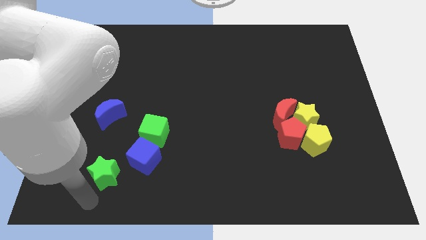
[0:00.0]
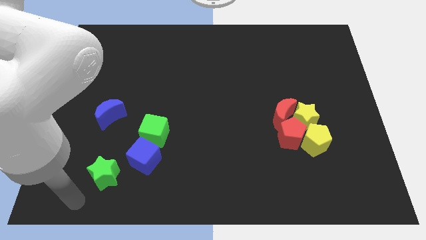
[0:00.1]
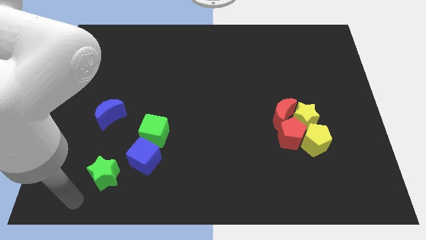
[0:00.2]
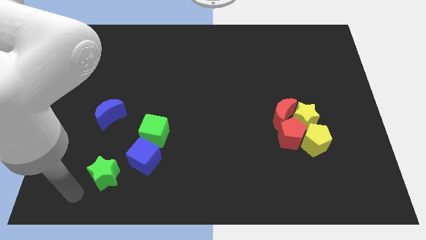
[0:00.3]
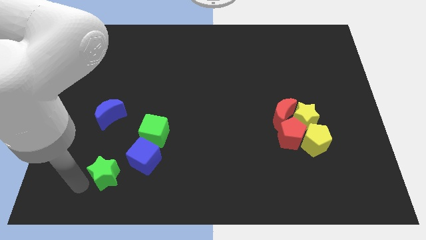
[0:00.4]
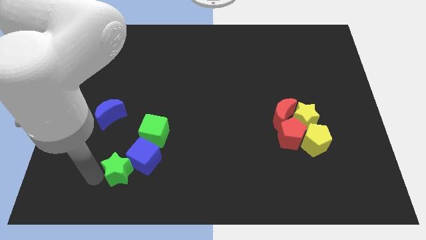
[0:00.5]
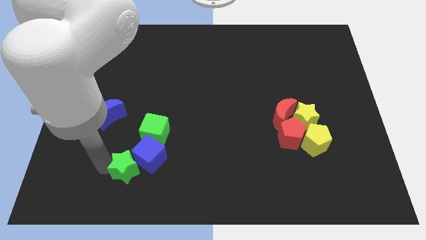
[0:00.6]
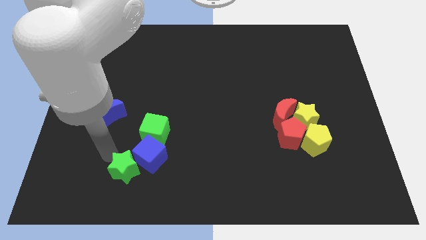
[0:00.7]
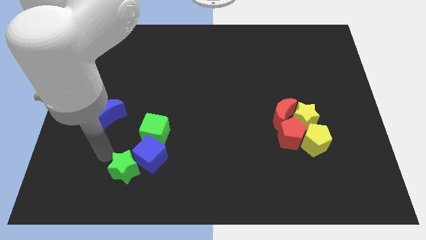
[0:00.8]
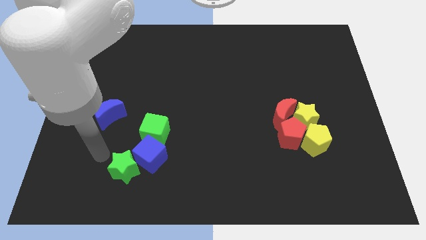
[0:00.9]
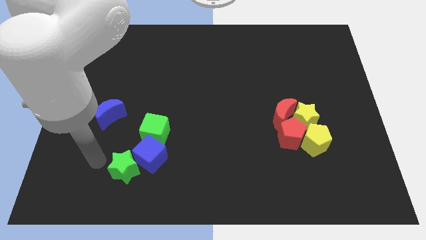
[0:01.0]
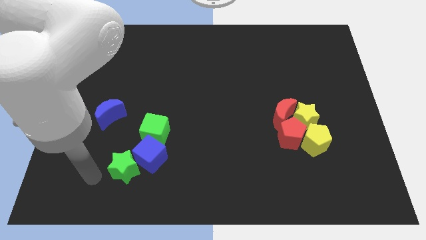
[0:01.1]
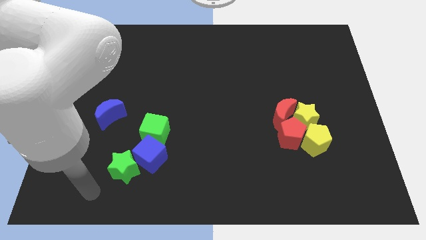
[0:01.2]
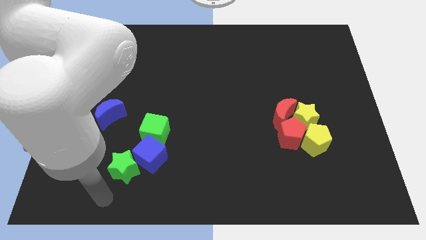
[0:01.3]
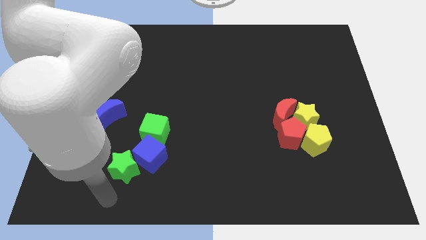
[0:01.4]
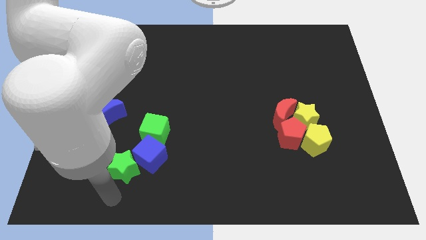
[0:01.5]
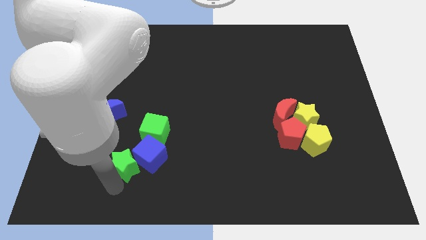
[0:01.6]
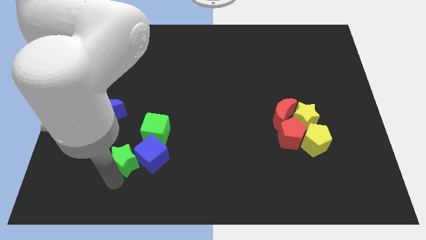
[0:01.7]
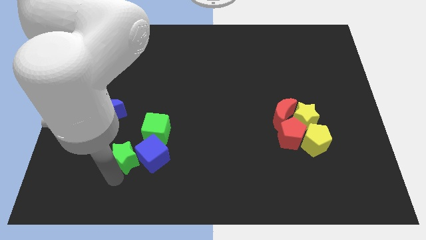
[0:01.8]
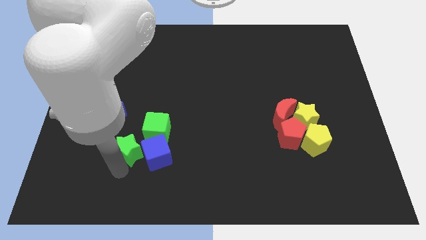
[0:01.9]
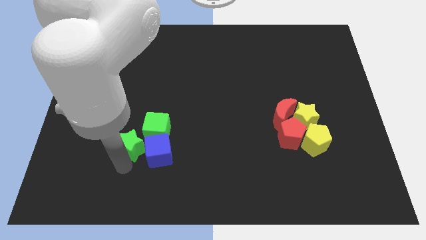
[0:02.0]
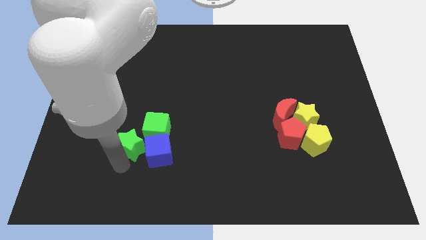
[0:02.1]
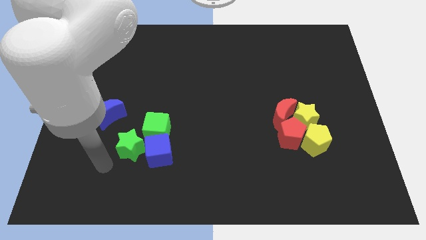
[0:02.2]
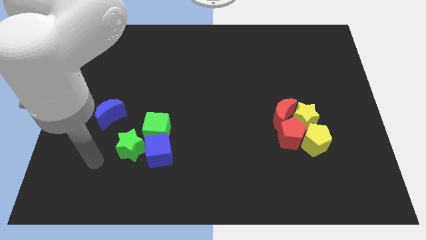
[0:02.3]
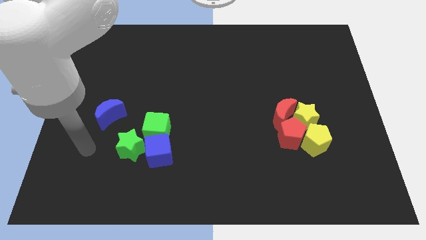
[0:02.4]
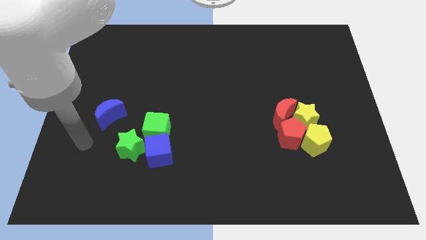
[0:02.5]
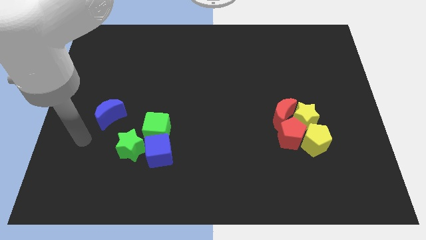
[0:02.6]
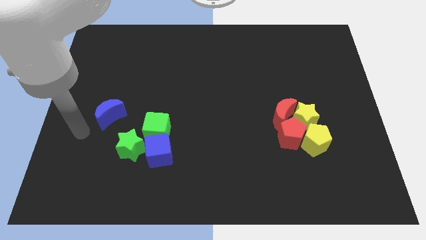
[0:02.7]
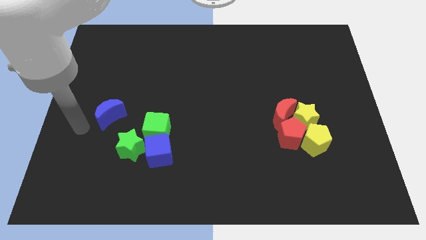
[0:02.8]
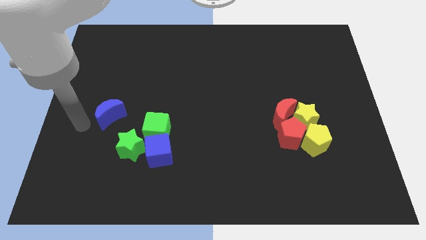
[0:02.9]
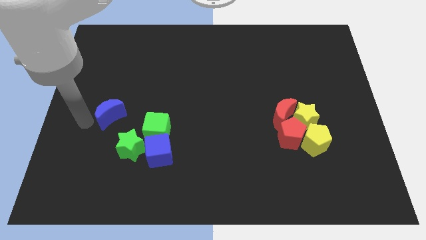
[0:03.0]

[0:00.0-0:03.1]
place the green star to the left of the blue cube

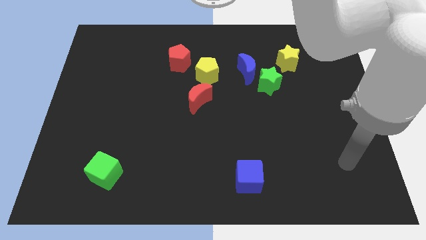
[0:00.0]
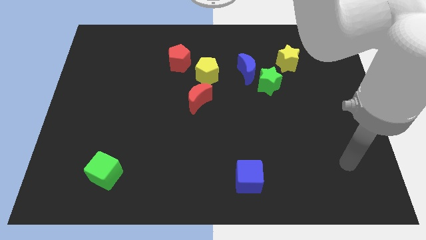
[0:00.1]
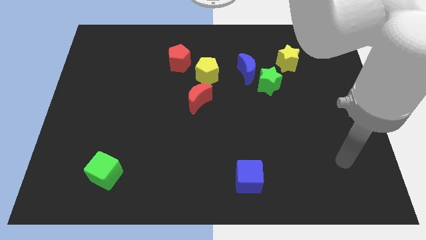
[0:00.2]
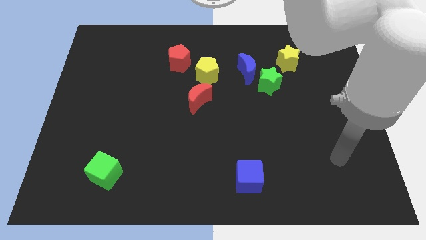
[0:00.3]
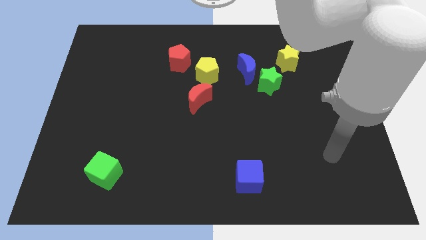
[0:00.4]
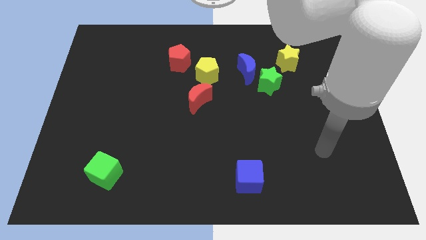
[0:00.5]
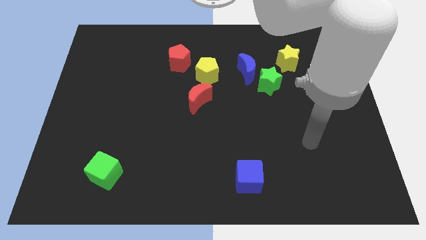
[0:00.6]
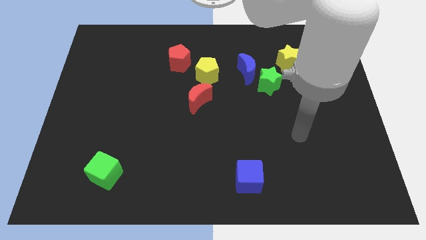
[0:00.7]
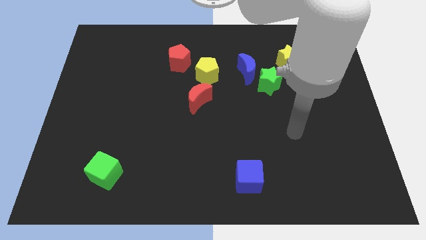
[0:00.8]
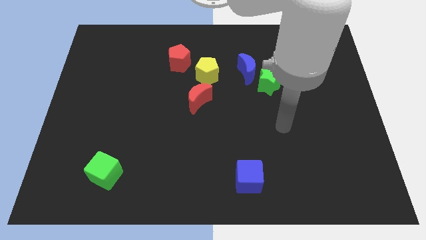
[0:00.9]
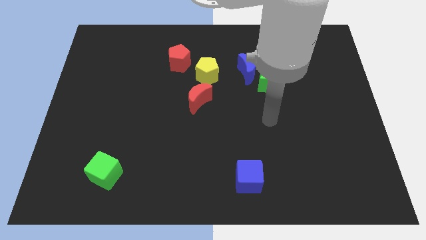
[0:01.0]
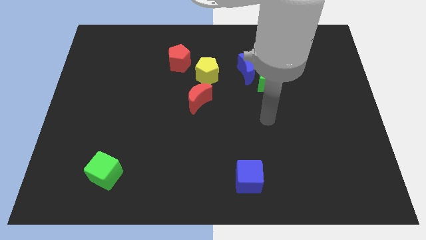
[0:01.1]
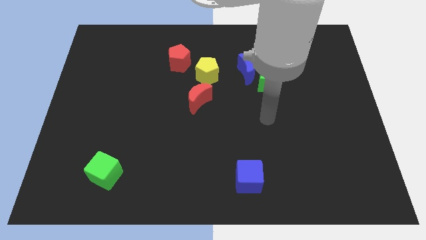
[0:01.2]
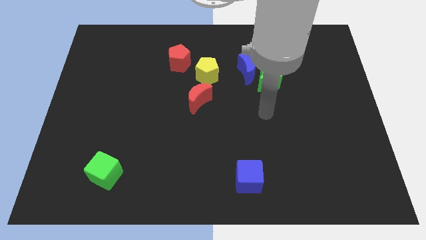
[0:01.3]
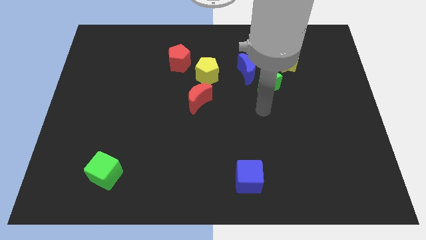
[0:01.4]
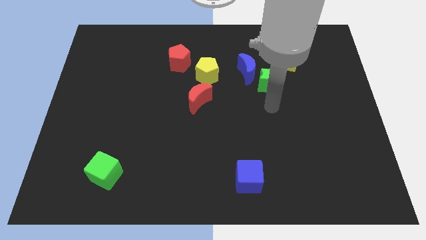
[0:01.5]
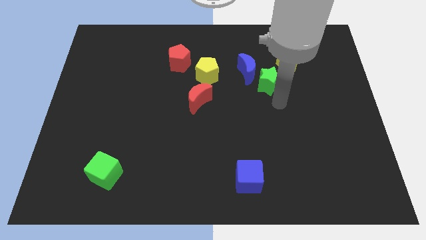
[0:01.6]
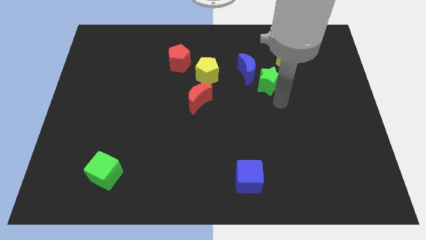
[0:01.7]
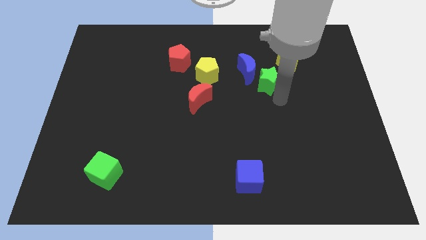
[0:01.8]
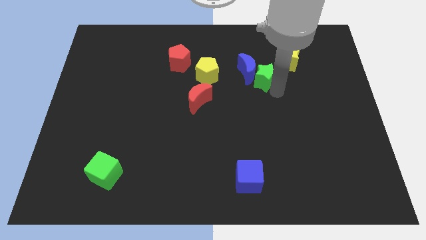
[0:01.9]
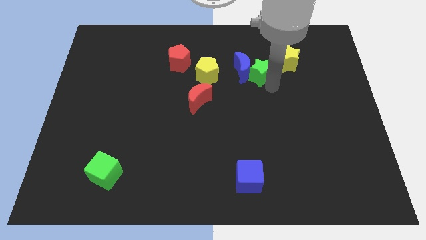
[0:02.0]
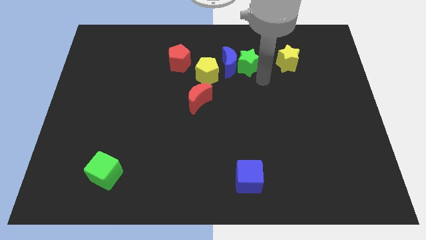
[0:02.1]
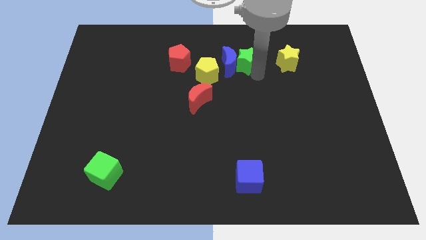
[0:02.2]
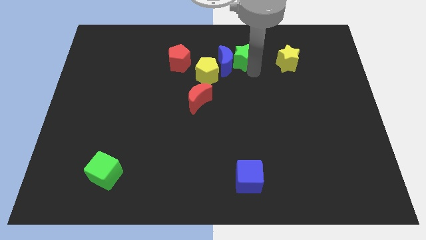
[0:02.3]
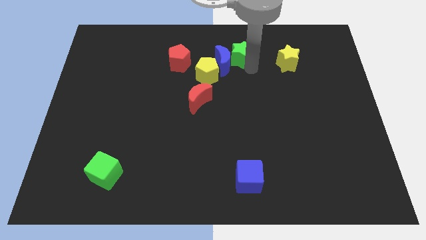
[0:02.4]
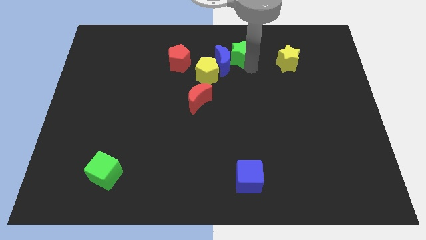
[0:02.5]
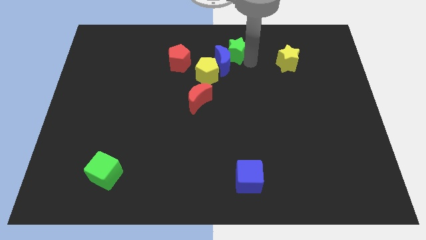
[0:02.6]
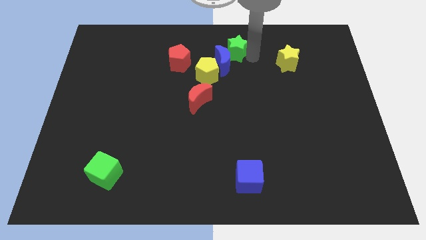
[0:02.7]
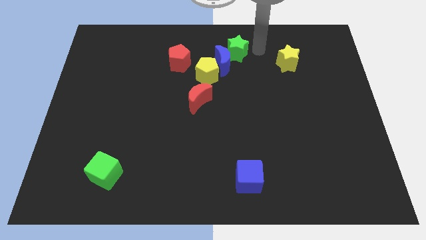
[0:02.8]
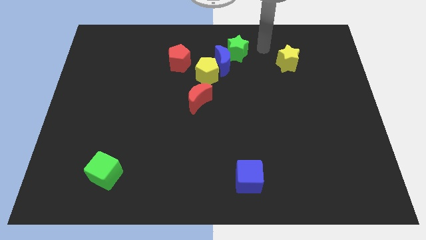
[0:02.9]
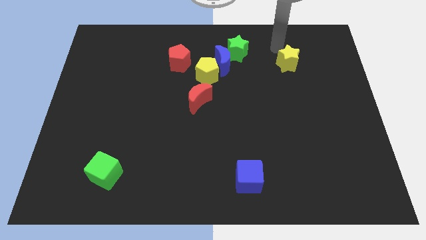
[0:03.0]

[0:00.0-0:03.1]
push the blue crescent and green star at the top right of the yellow pentagon

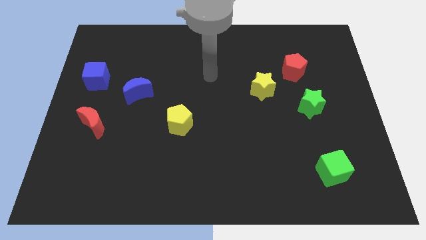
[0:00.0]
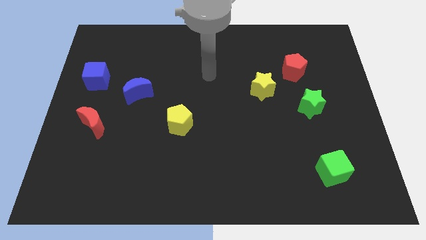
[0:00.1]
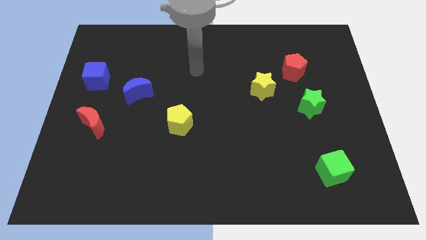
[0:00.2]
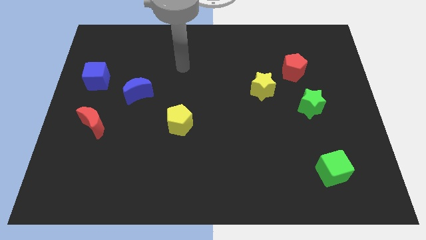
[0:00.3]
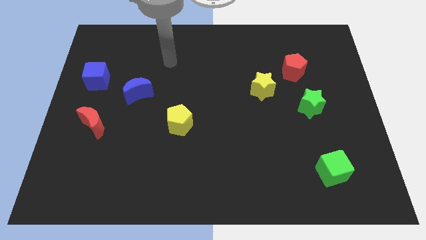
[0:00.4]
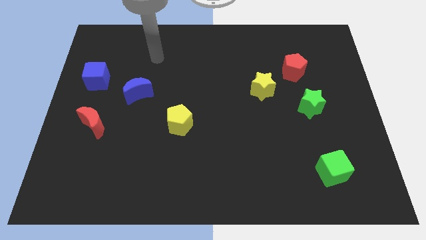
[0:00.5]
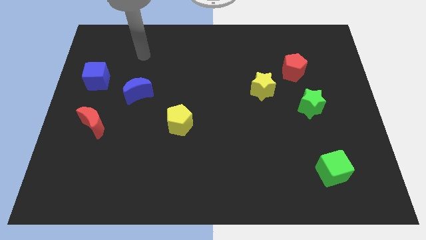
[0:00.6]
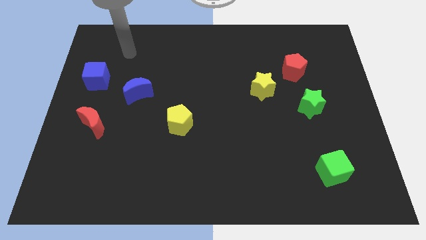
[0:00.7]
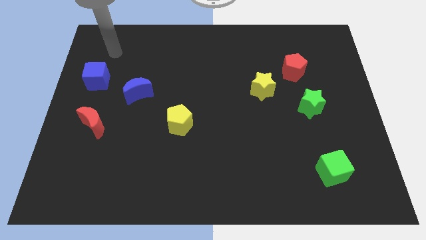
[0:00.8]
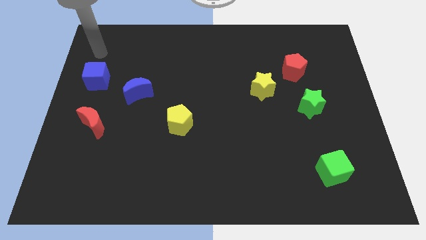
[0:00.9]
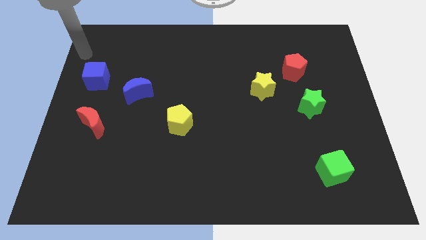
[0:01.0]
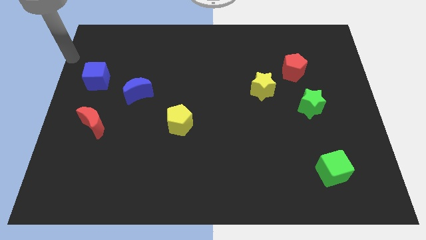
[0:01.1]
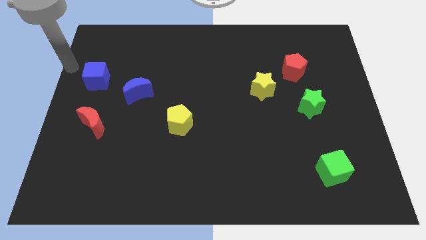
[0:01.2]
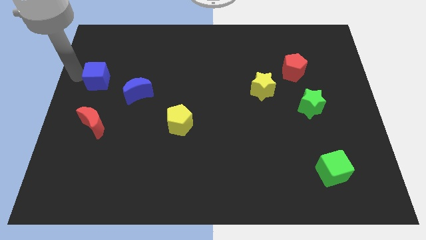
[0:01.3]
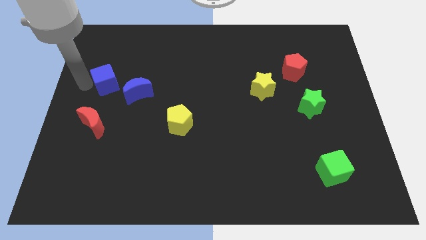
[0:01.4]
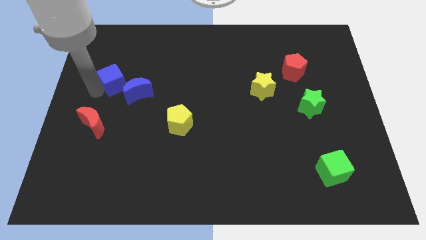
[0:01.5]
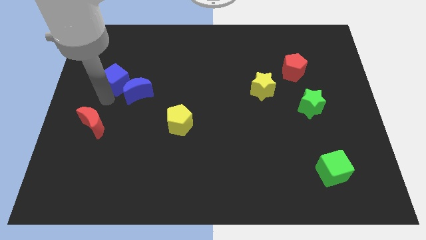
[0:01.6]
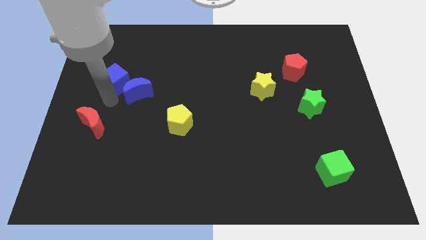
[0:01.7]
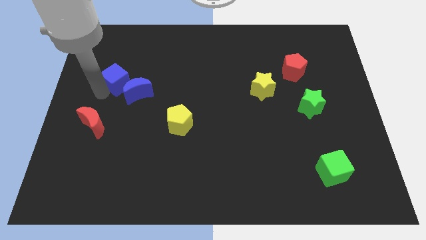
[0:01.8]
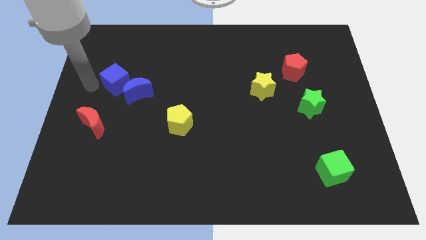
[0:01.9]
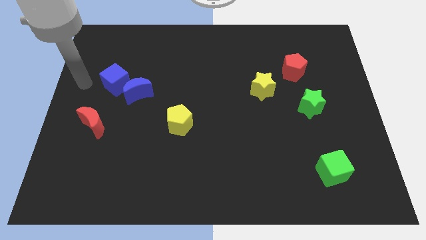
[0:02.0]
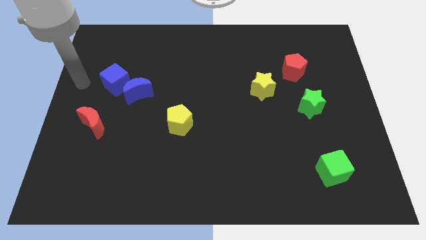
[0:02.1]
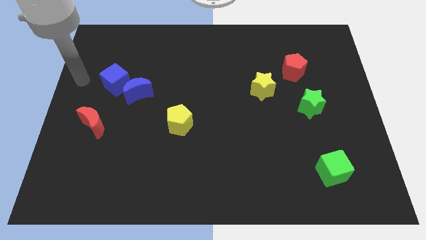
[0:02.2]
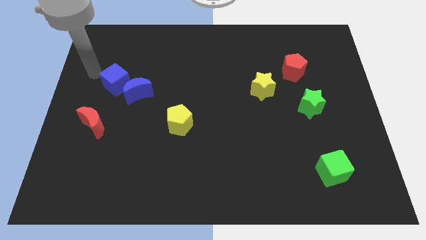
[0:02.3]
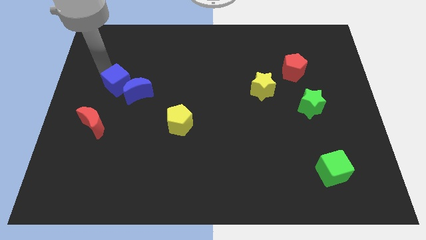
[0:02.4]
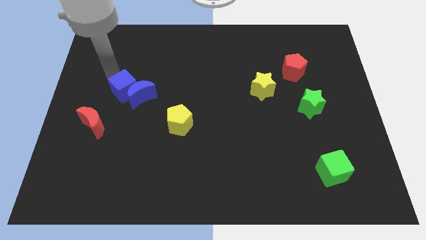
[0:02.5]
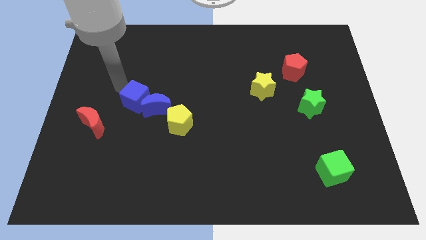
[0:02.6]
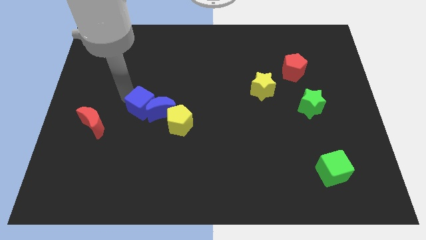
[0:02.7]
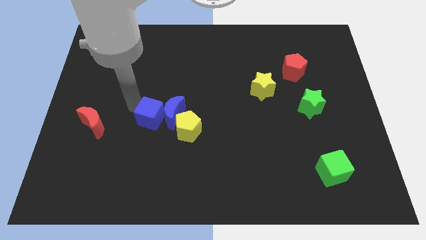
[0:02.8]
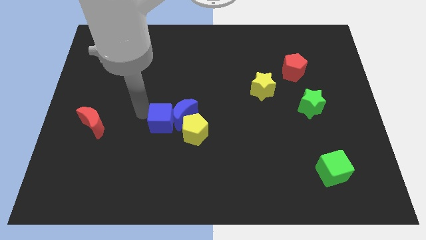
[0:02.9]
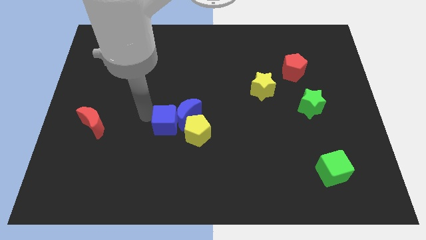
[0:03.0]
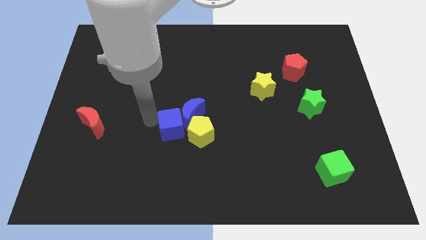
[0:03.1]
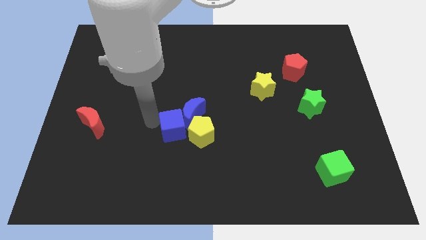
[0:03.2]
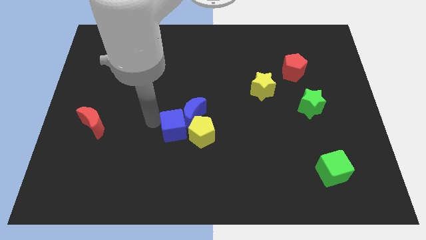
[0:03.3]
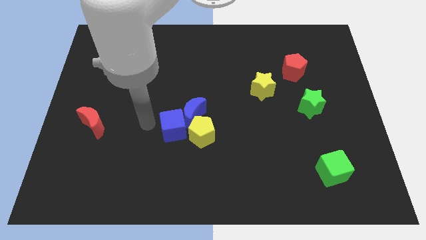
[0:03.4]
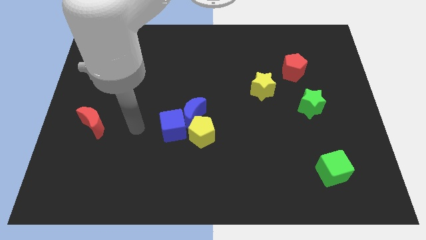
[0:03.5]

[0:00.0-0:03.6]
push the blue cube into the blue moon
